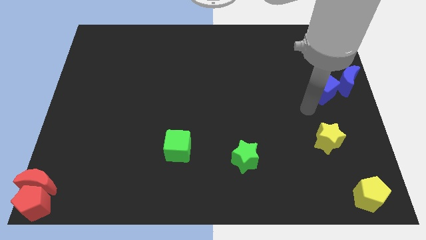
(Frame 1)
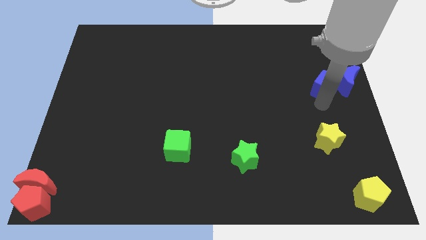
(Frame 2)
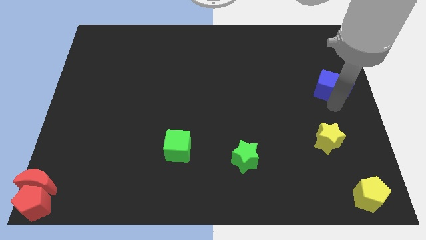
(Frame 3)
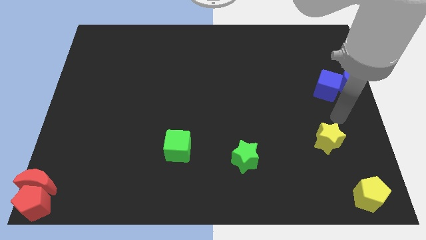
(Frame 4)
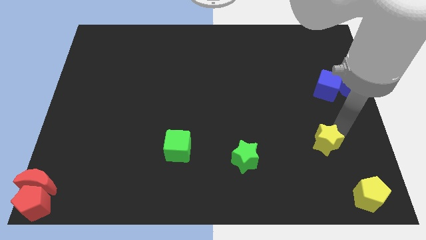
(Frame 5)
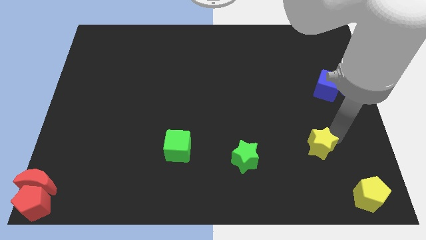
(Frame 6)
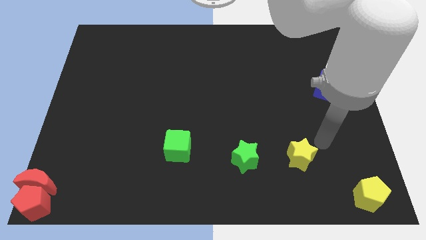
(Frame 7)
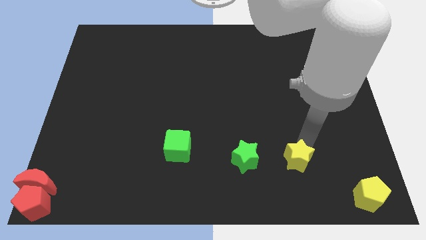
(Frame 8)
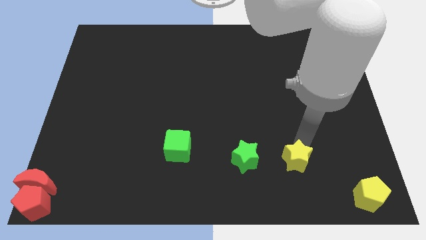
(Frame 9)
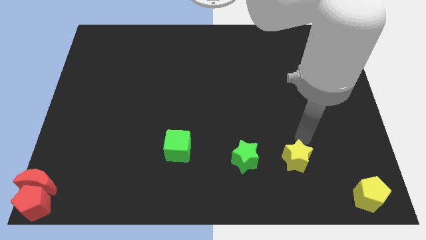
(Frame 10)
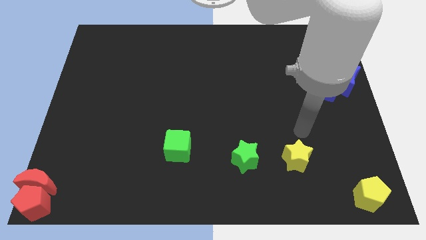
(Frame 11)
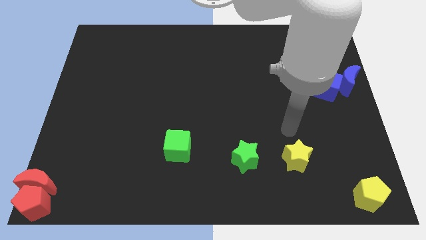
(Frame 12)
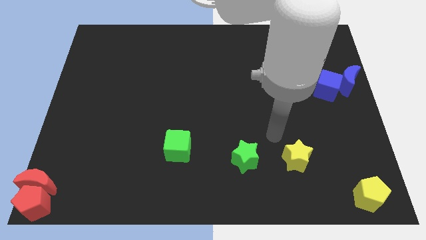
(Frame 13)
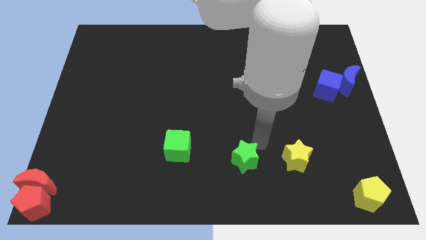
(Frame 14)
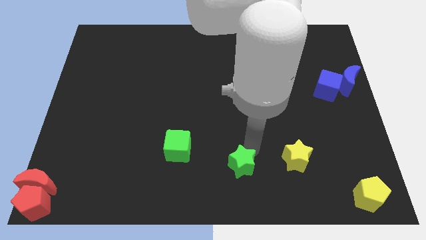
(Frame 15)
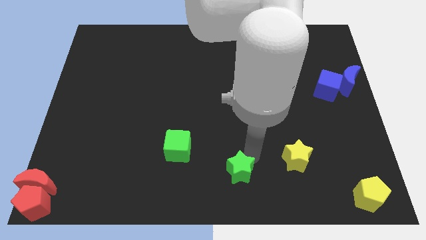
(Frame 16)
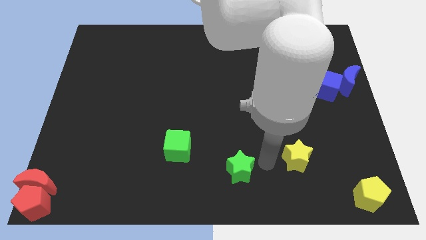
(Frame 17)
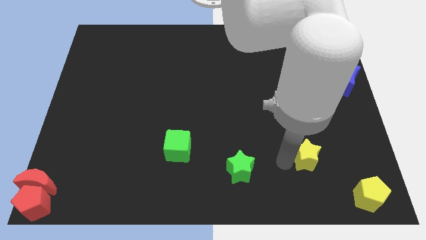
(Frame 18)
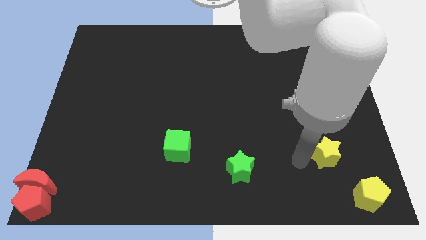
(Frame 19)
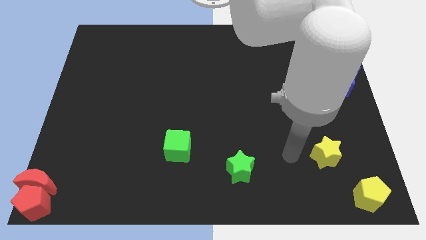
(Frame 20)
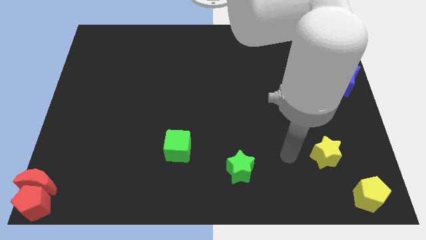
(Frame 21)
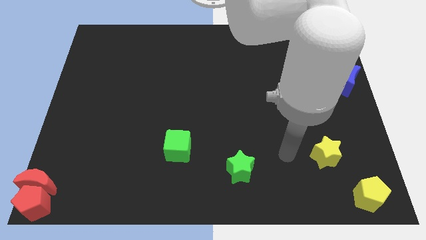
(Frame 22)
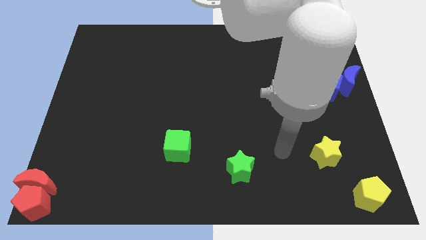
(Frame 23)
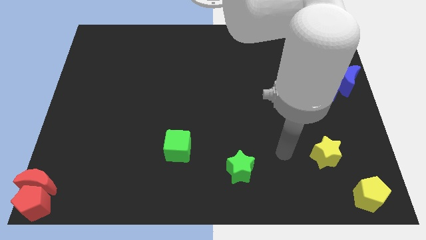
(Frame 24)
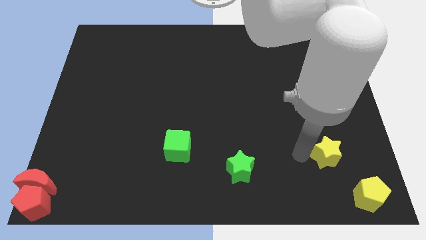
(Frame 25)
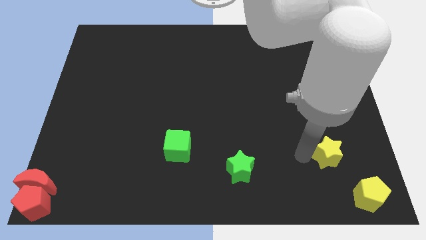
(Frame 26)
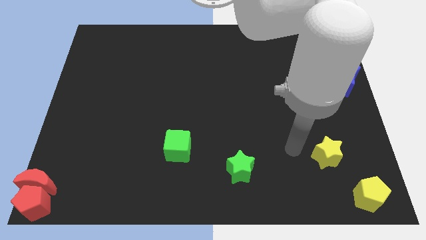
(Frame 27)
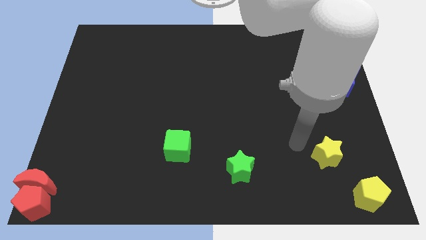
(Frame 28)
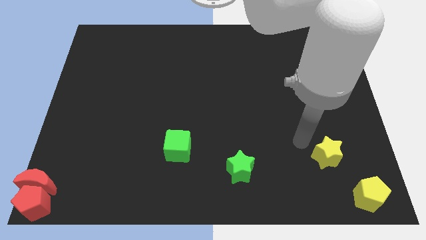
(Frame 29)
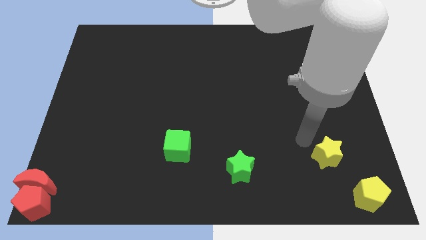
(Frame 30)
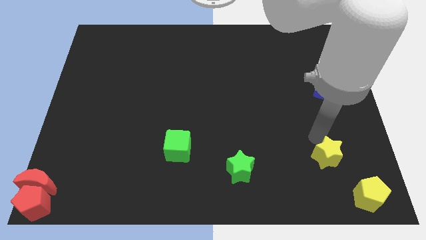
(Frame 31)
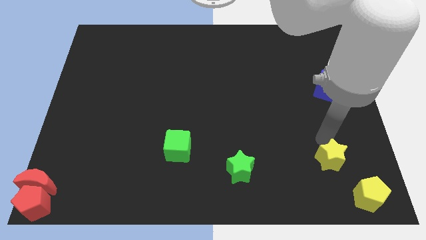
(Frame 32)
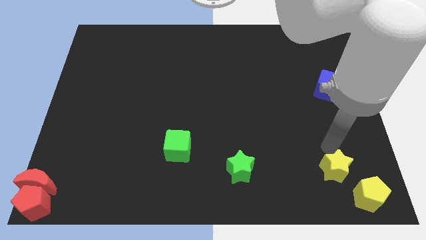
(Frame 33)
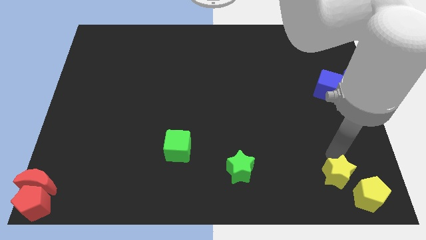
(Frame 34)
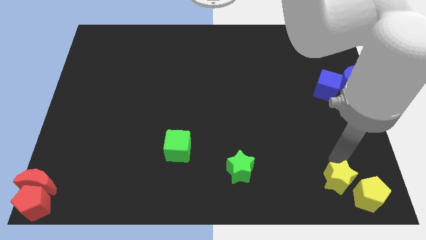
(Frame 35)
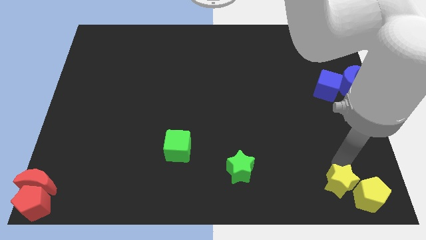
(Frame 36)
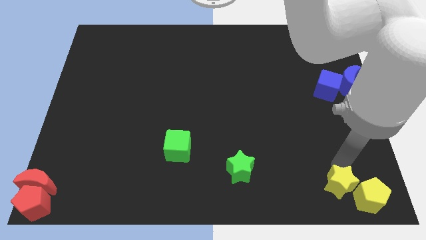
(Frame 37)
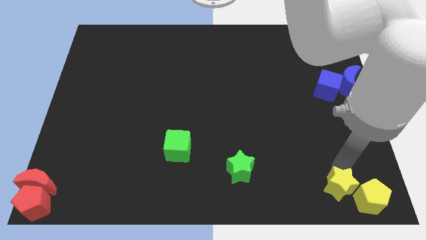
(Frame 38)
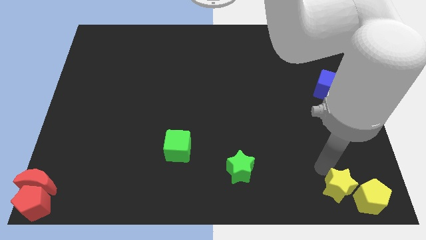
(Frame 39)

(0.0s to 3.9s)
place the yellow star diagonal top right corner of the yellow pentagon

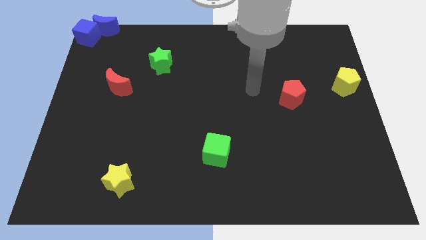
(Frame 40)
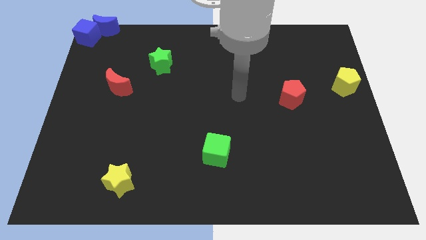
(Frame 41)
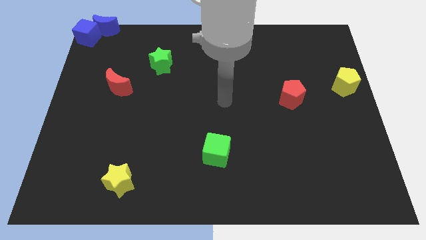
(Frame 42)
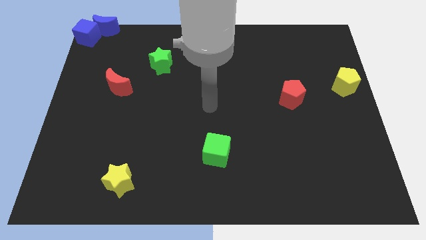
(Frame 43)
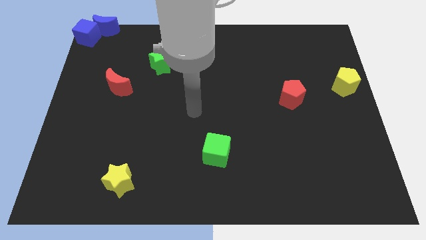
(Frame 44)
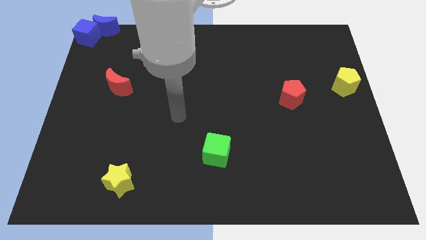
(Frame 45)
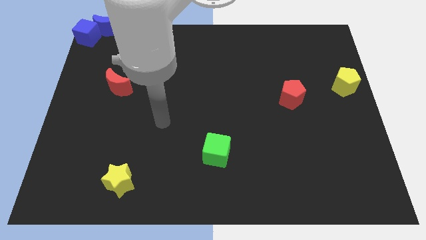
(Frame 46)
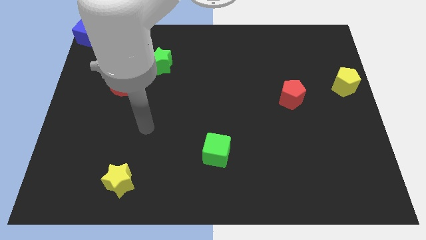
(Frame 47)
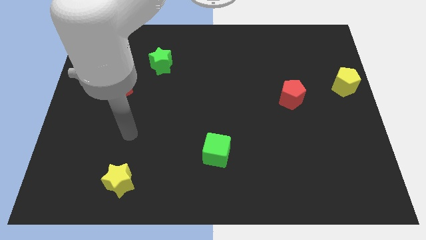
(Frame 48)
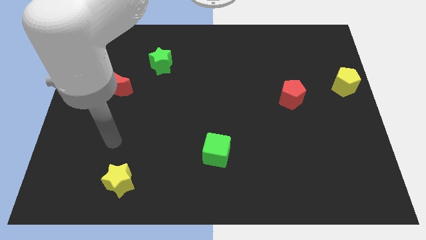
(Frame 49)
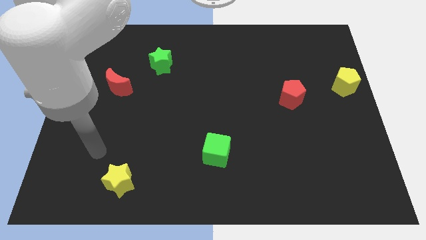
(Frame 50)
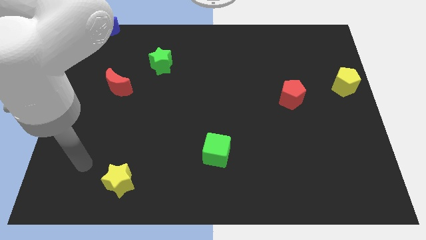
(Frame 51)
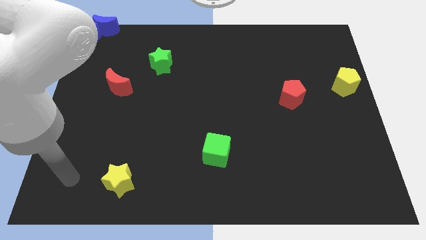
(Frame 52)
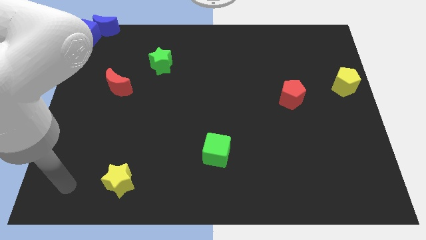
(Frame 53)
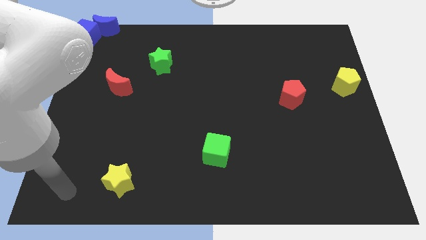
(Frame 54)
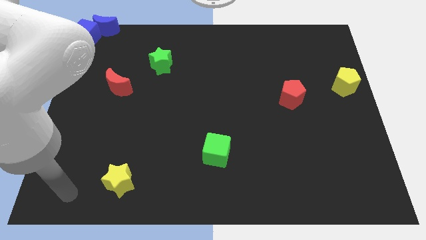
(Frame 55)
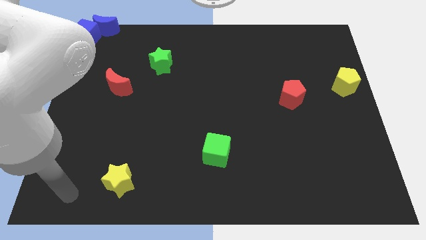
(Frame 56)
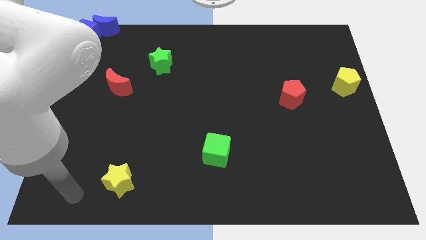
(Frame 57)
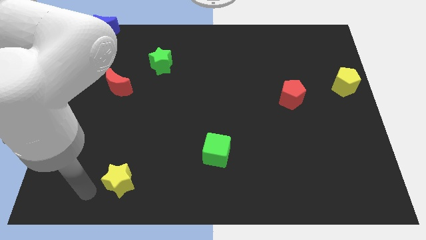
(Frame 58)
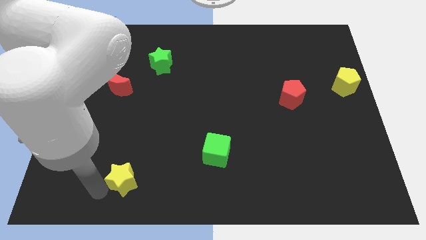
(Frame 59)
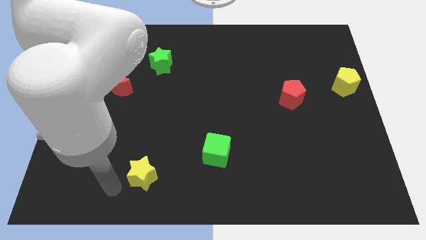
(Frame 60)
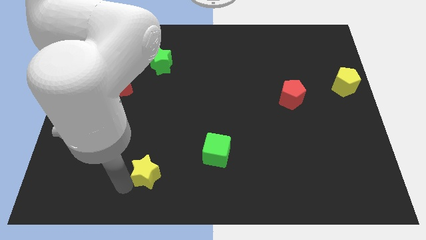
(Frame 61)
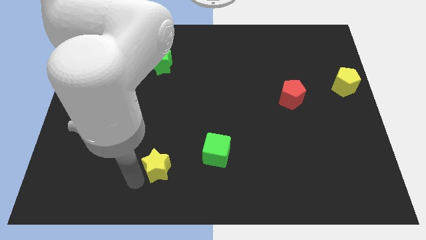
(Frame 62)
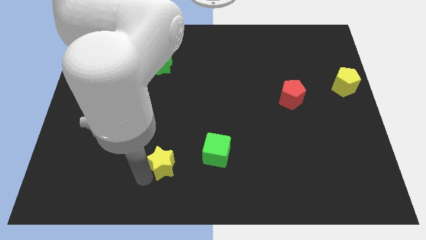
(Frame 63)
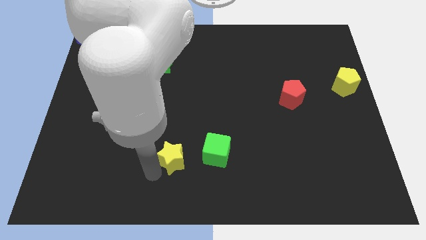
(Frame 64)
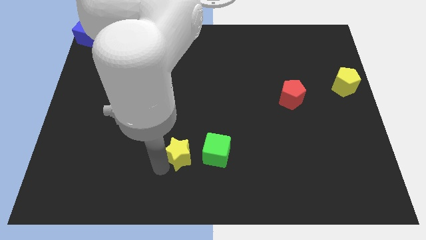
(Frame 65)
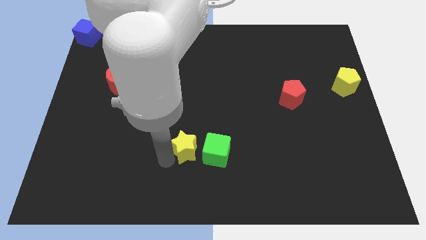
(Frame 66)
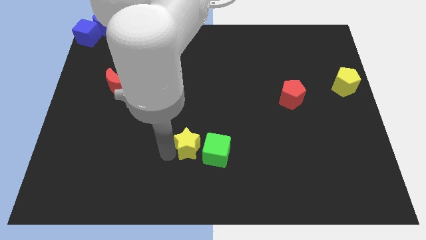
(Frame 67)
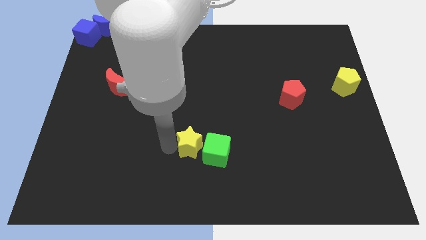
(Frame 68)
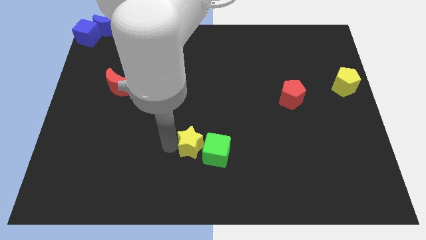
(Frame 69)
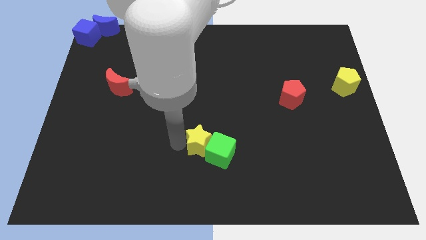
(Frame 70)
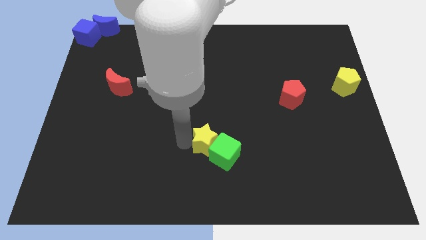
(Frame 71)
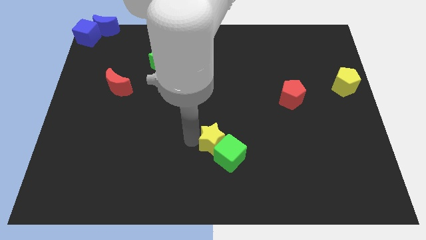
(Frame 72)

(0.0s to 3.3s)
move the yellow star into the green cube

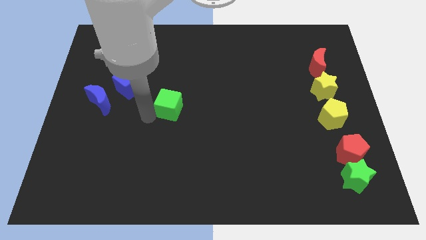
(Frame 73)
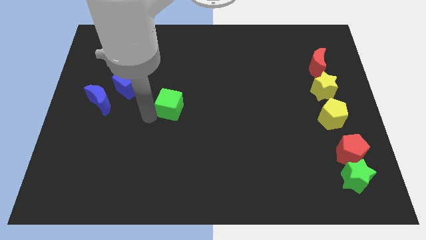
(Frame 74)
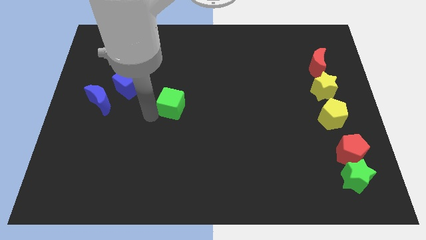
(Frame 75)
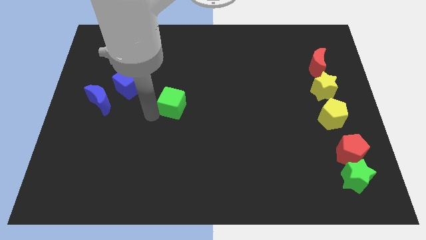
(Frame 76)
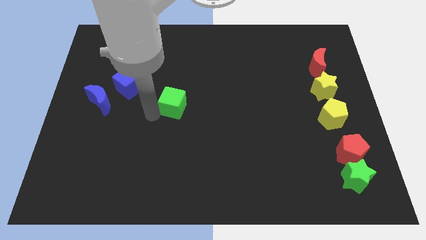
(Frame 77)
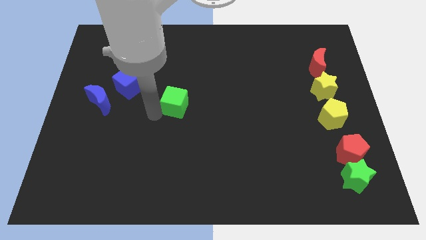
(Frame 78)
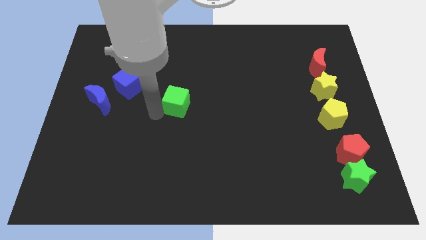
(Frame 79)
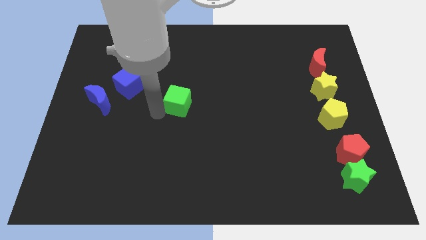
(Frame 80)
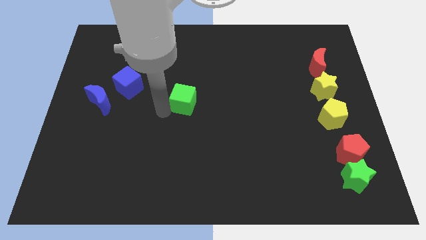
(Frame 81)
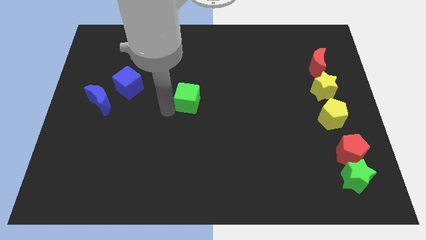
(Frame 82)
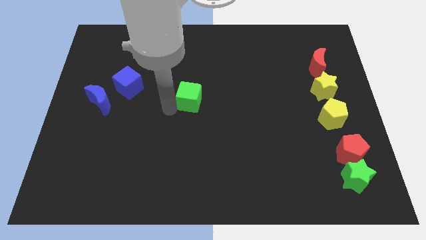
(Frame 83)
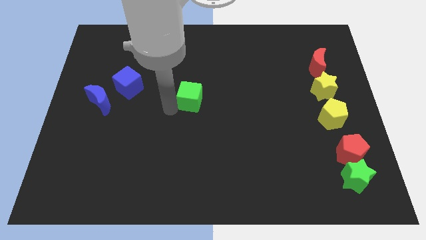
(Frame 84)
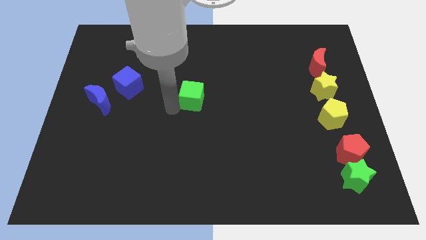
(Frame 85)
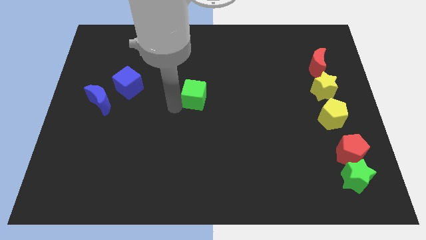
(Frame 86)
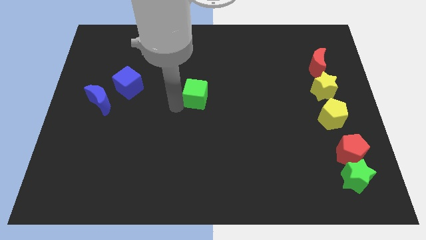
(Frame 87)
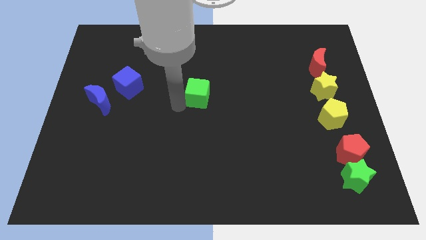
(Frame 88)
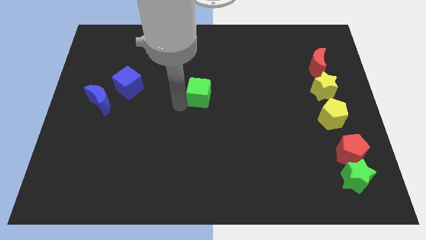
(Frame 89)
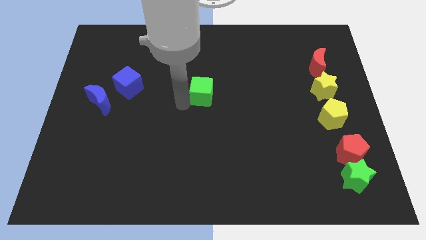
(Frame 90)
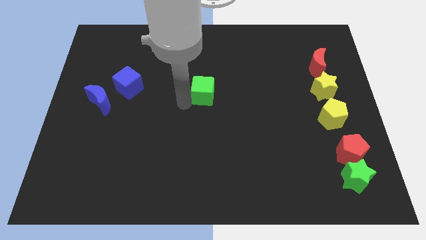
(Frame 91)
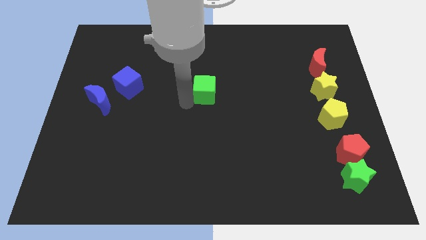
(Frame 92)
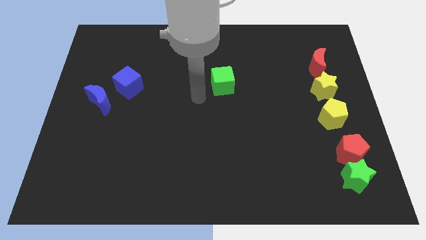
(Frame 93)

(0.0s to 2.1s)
put the green cube in between the green cube and the yellow star
